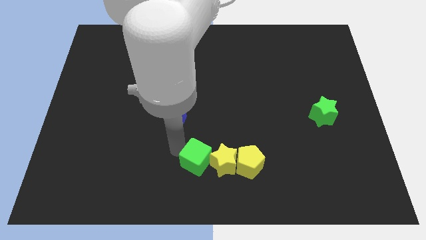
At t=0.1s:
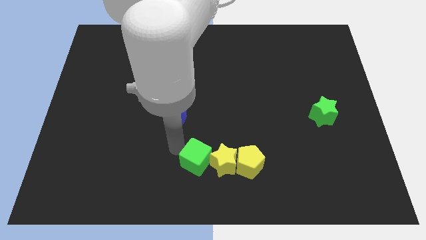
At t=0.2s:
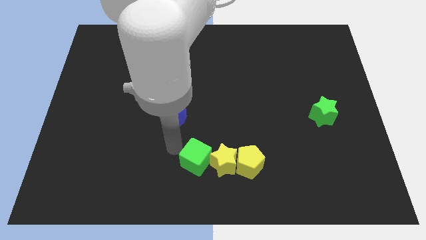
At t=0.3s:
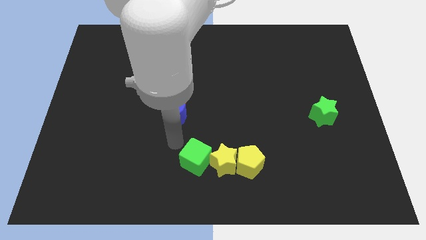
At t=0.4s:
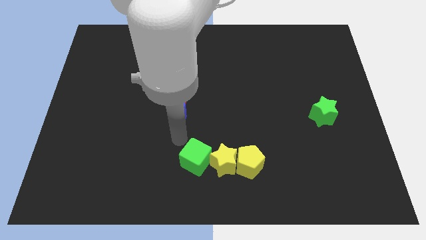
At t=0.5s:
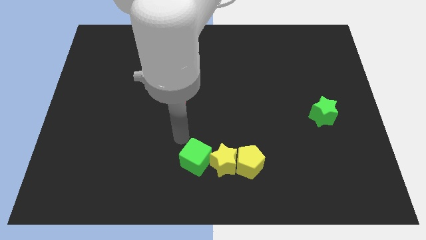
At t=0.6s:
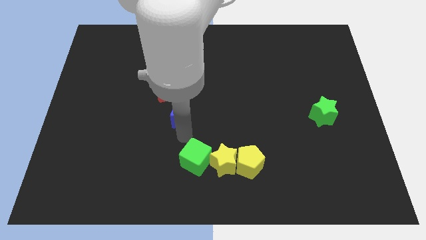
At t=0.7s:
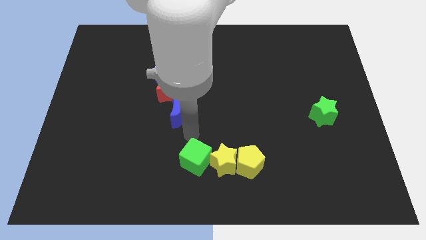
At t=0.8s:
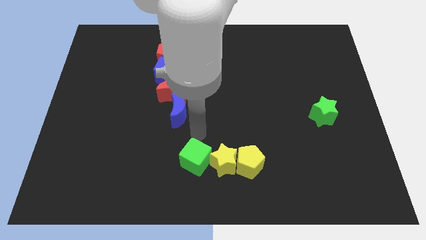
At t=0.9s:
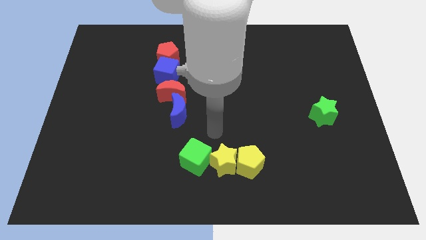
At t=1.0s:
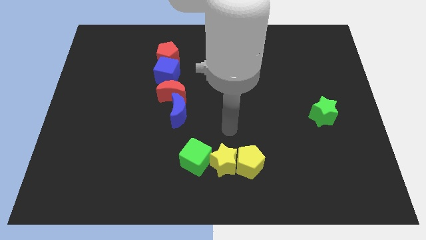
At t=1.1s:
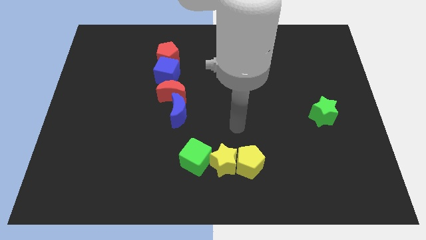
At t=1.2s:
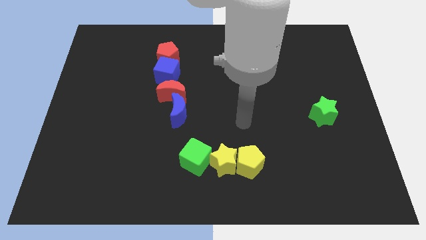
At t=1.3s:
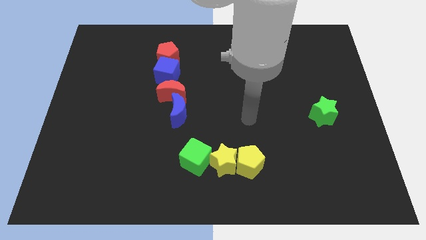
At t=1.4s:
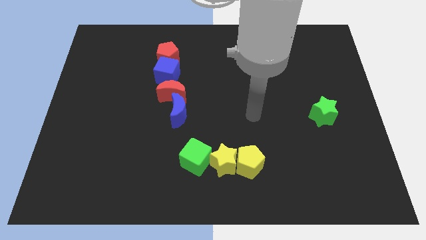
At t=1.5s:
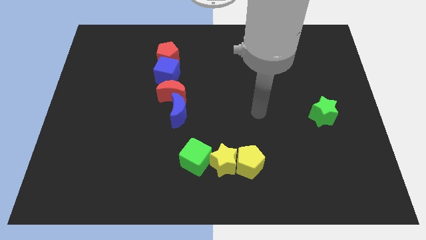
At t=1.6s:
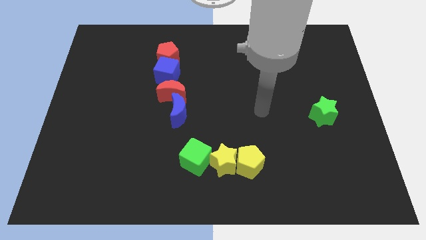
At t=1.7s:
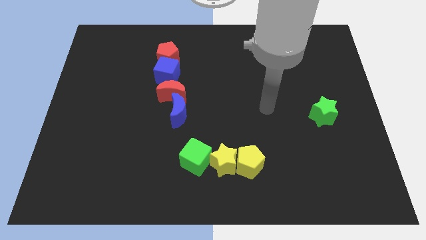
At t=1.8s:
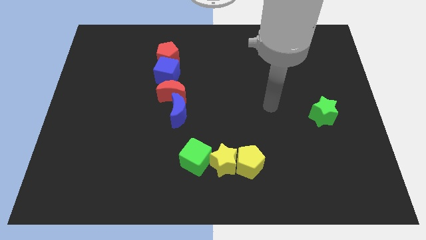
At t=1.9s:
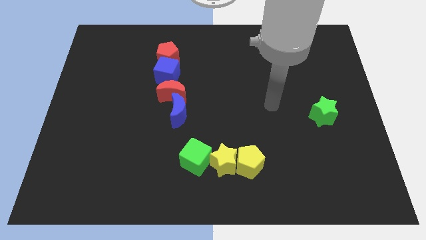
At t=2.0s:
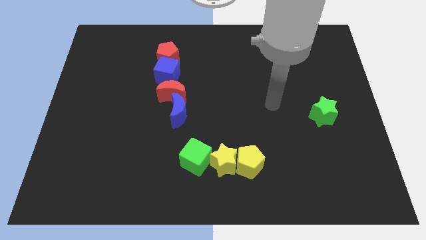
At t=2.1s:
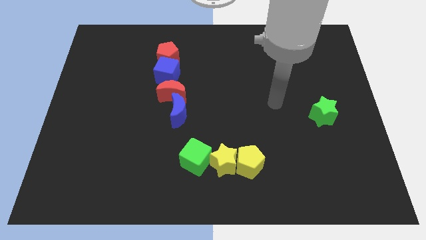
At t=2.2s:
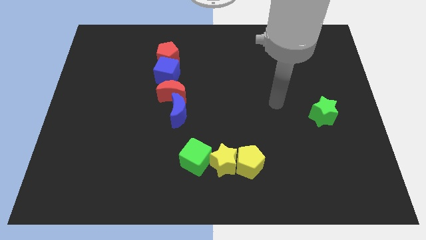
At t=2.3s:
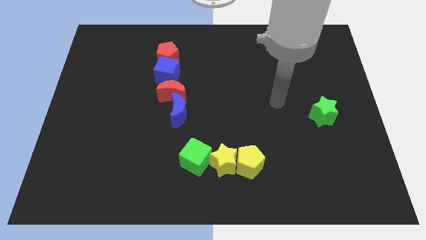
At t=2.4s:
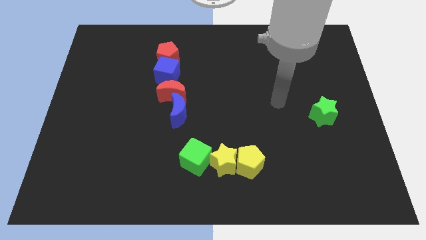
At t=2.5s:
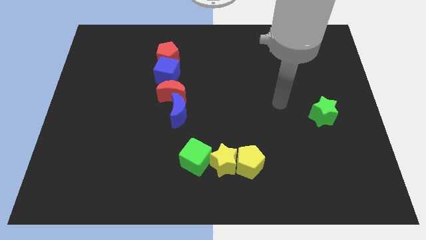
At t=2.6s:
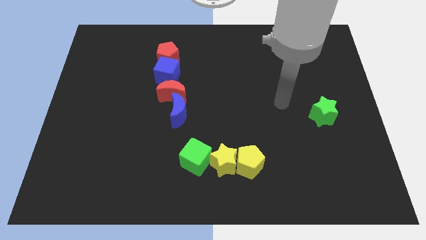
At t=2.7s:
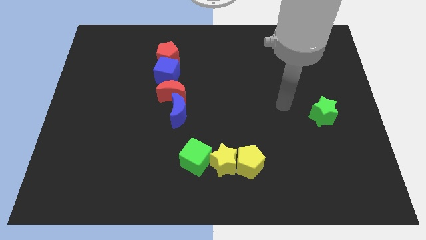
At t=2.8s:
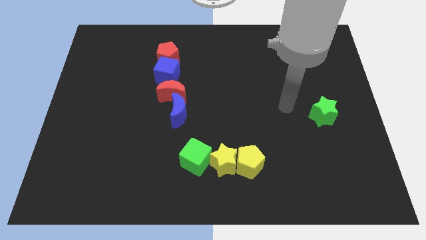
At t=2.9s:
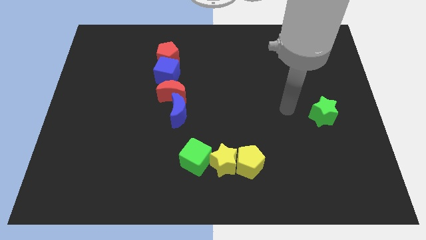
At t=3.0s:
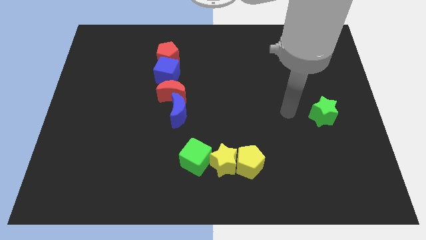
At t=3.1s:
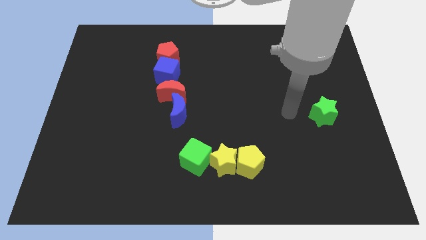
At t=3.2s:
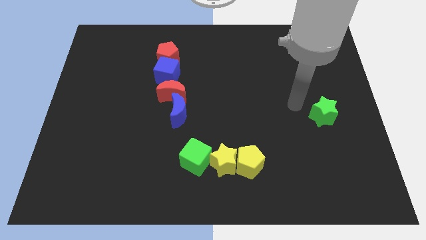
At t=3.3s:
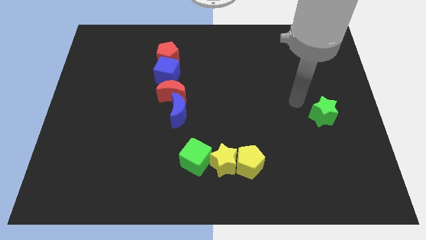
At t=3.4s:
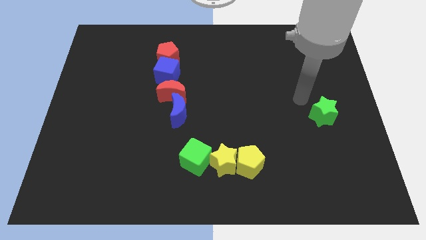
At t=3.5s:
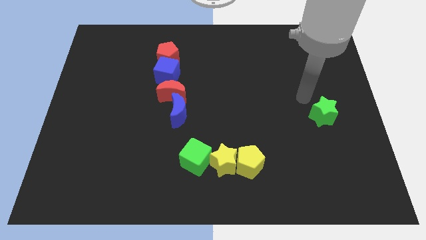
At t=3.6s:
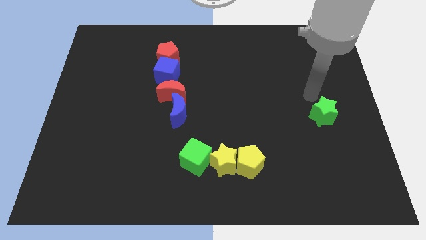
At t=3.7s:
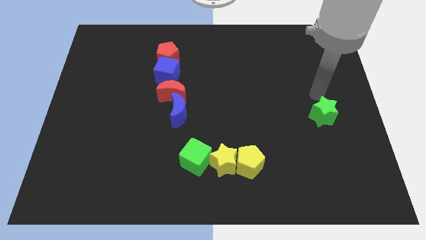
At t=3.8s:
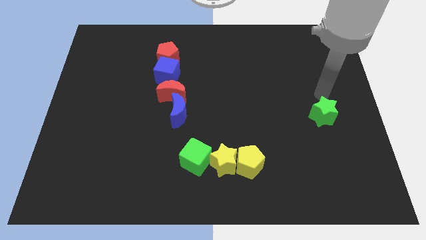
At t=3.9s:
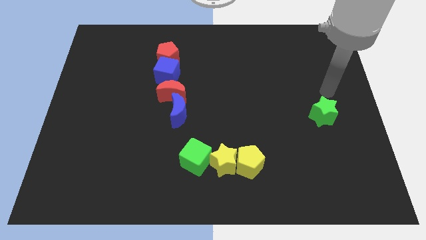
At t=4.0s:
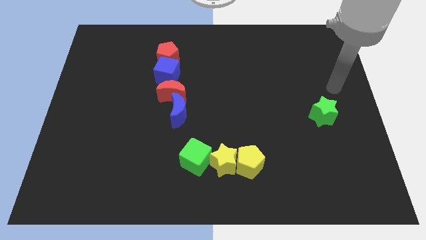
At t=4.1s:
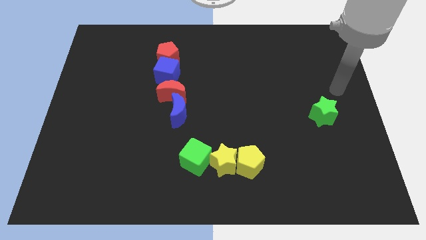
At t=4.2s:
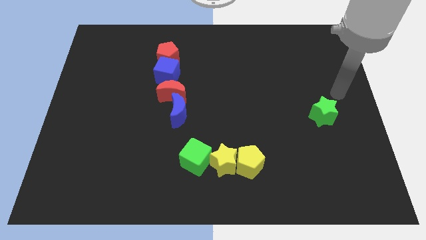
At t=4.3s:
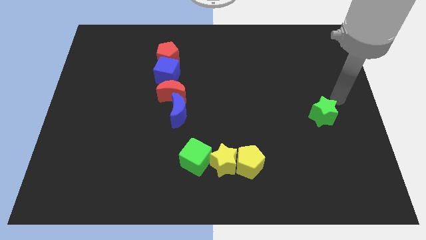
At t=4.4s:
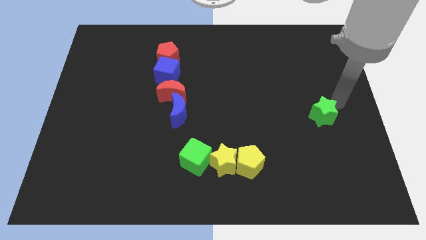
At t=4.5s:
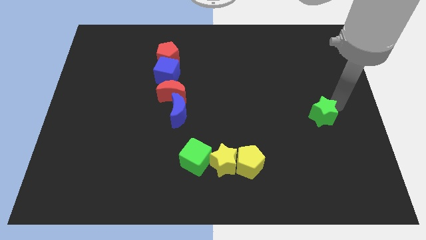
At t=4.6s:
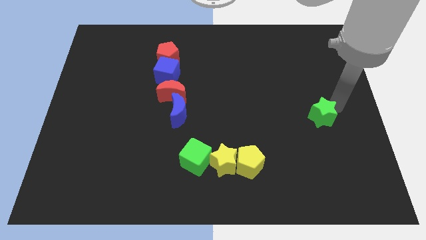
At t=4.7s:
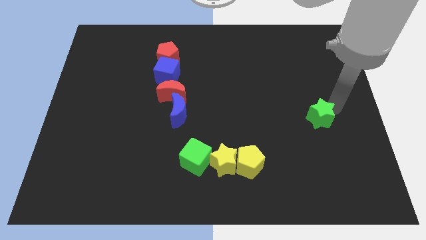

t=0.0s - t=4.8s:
touch the right side of the green star

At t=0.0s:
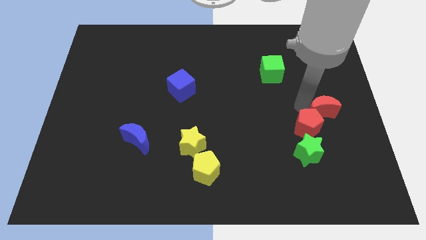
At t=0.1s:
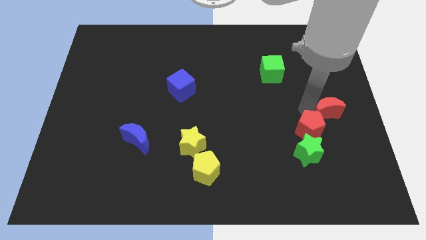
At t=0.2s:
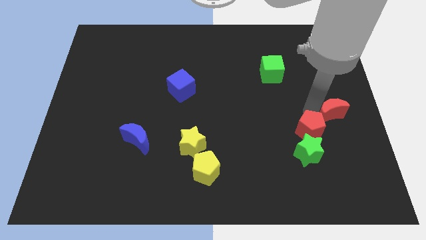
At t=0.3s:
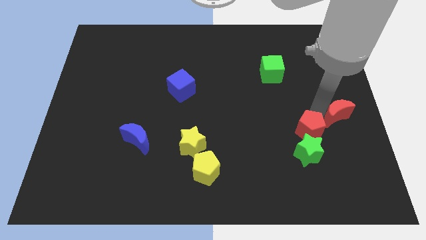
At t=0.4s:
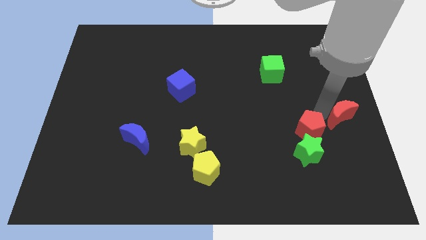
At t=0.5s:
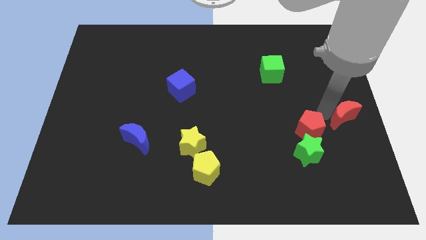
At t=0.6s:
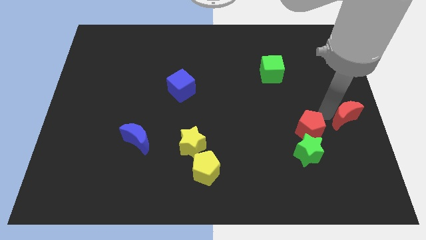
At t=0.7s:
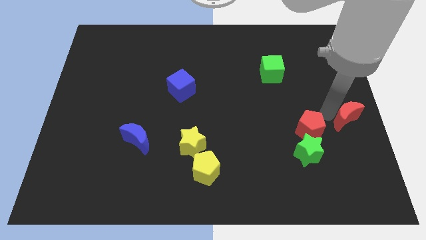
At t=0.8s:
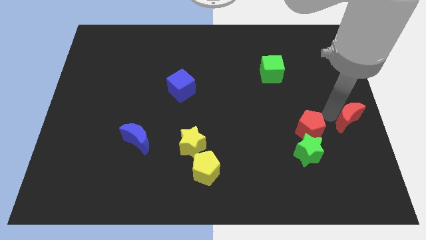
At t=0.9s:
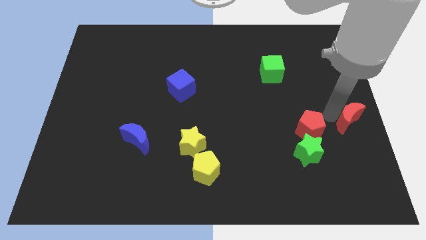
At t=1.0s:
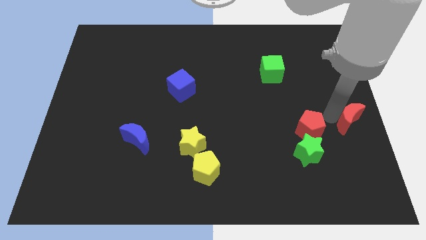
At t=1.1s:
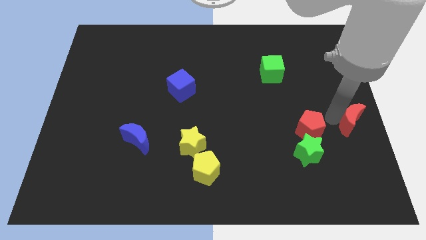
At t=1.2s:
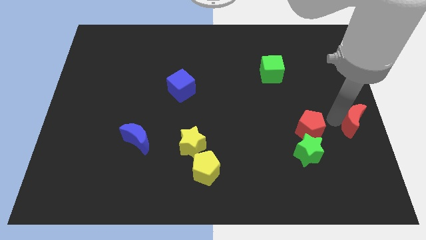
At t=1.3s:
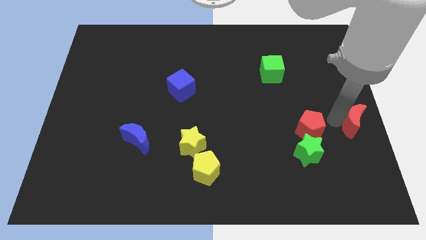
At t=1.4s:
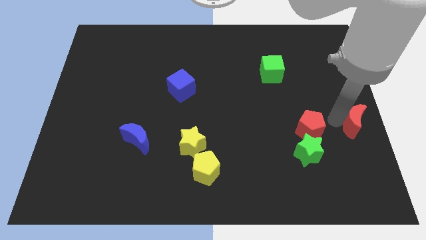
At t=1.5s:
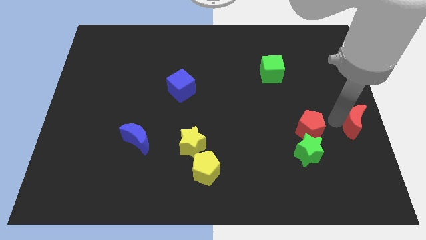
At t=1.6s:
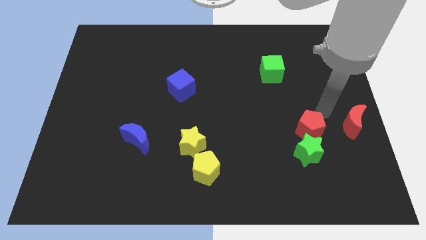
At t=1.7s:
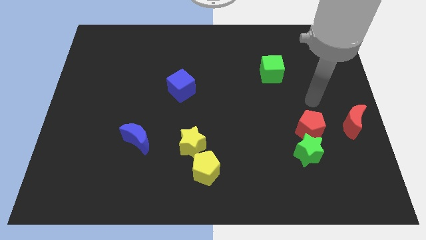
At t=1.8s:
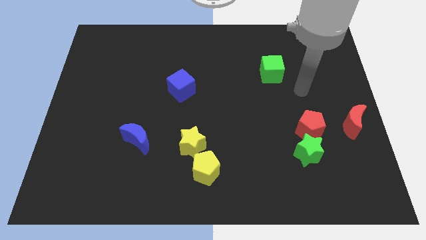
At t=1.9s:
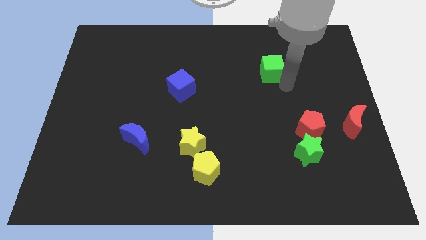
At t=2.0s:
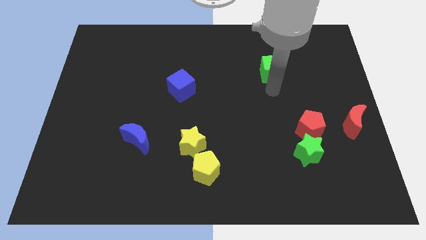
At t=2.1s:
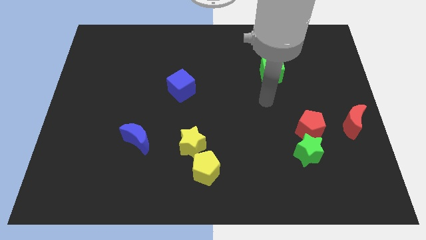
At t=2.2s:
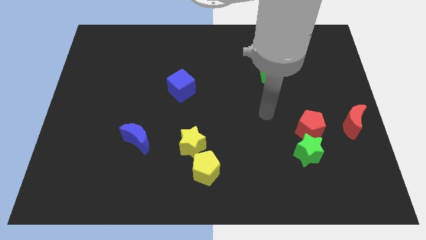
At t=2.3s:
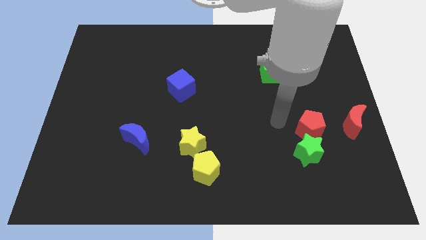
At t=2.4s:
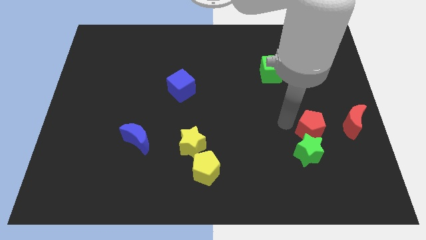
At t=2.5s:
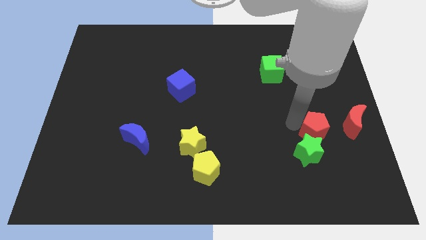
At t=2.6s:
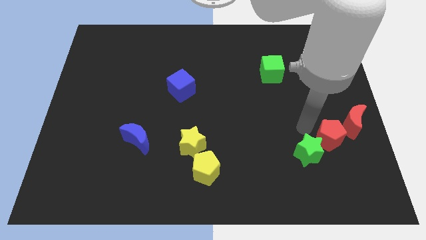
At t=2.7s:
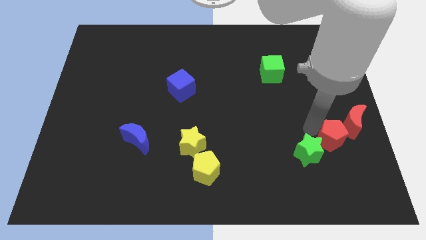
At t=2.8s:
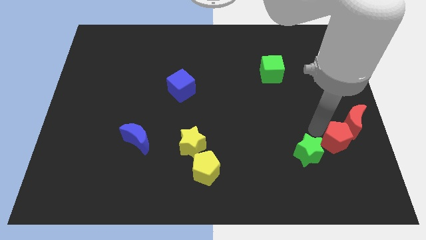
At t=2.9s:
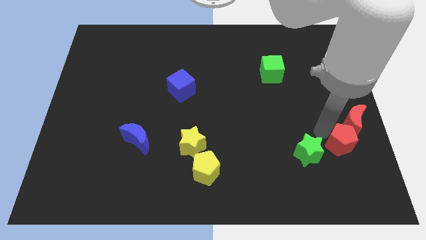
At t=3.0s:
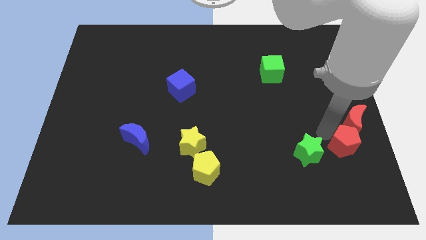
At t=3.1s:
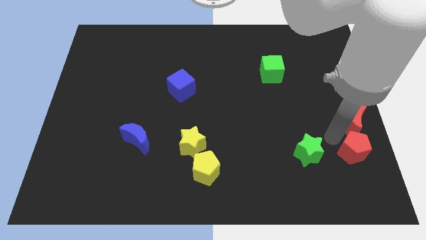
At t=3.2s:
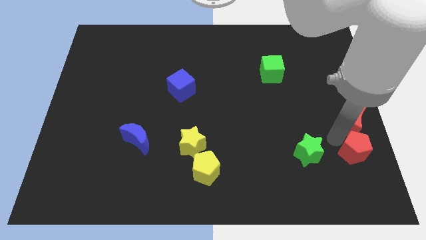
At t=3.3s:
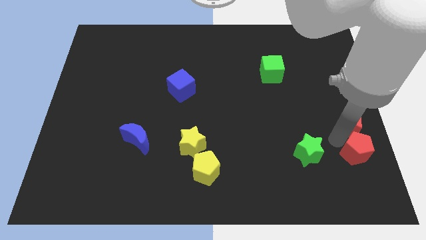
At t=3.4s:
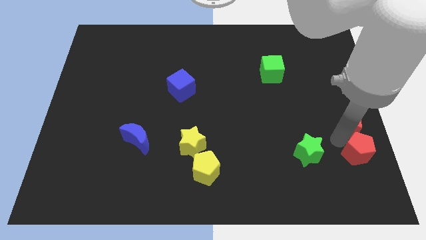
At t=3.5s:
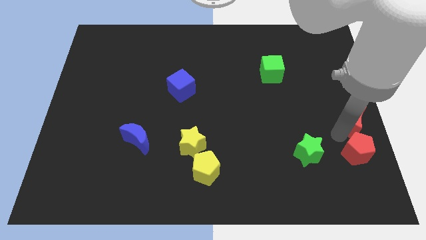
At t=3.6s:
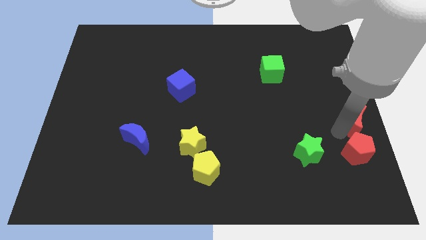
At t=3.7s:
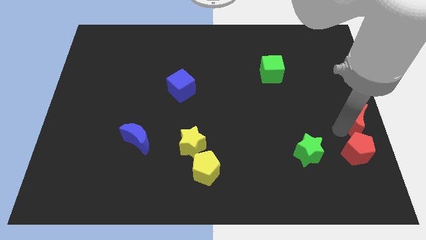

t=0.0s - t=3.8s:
push the red blocks towards the right center of the board

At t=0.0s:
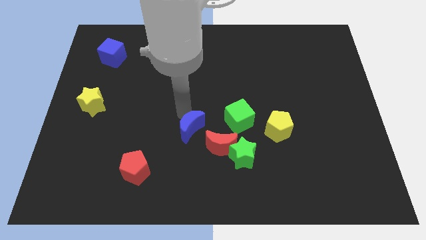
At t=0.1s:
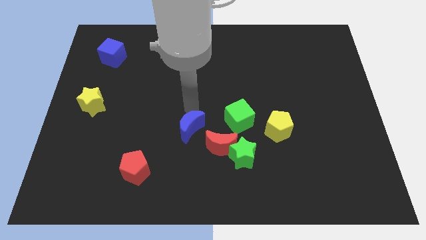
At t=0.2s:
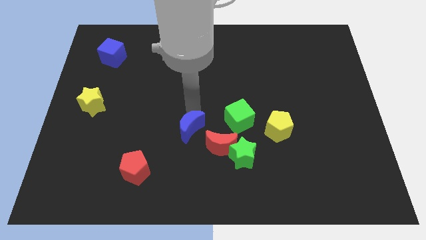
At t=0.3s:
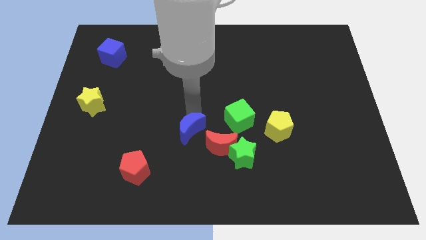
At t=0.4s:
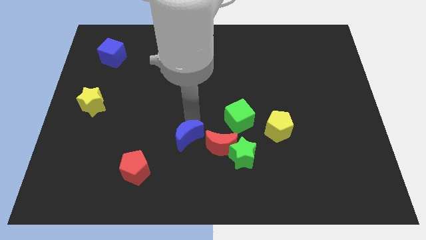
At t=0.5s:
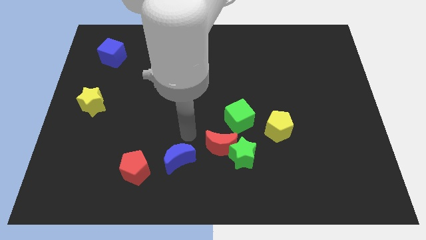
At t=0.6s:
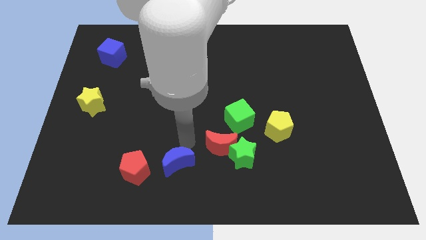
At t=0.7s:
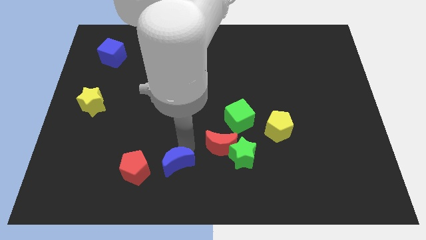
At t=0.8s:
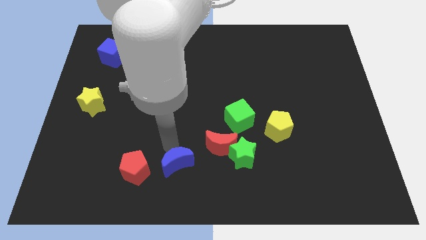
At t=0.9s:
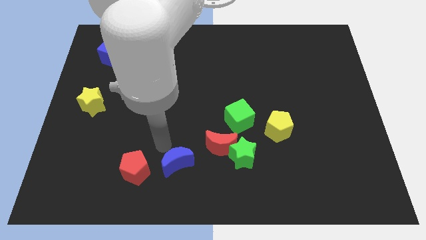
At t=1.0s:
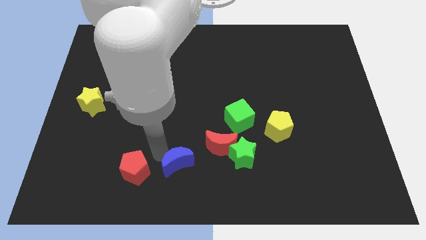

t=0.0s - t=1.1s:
push blue moon to the right of red pentagon
